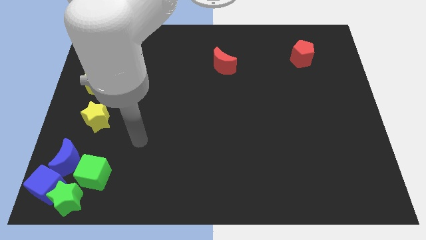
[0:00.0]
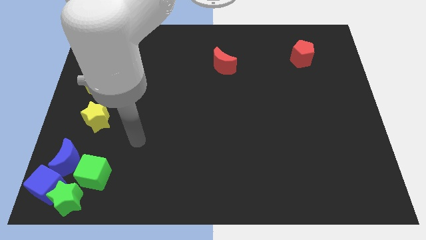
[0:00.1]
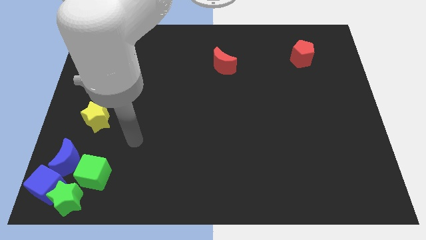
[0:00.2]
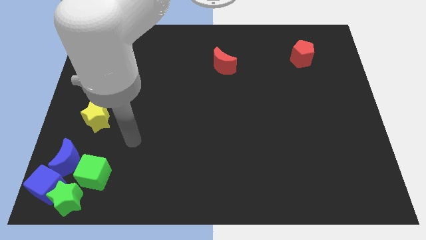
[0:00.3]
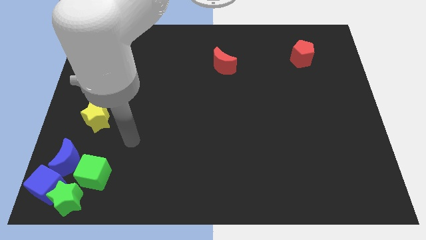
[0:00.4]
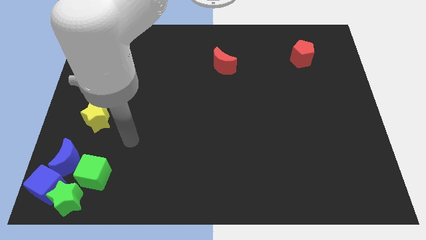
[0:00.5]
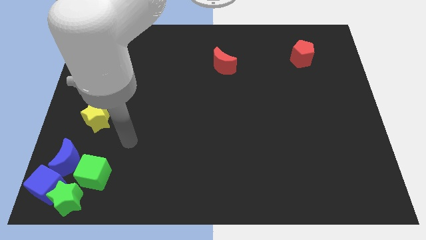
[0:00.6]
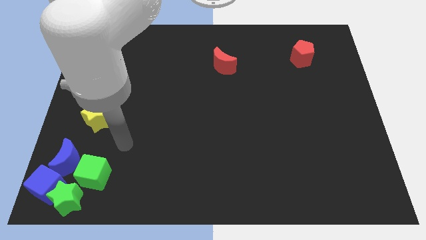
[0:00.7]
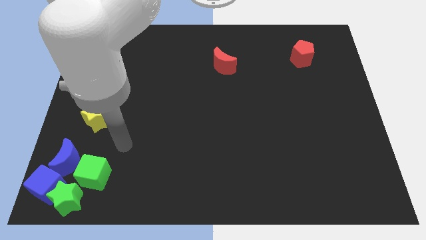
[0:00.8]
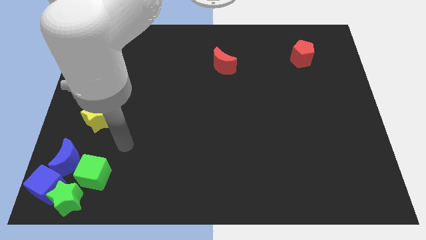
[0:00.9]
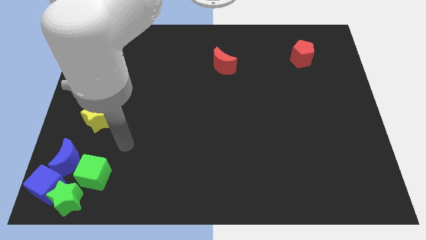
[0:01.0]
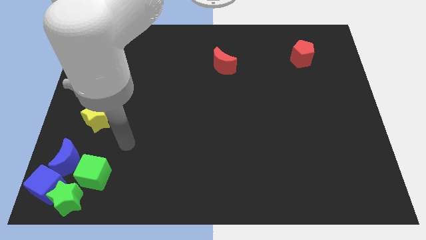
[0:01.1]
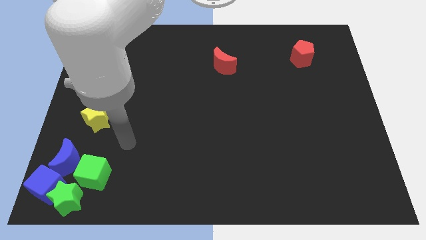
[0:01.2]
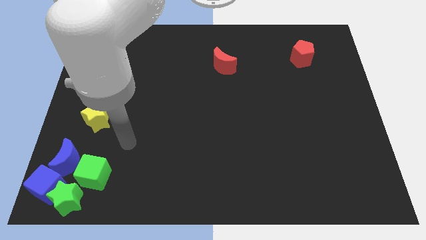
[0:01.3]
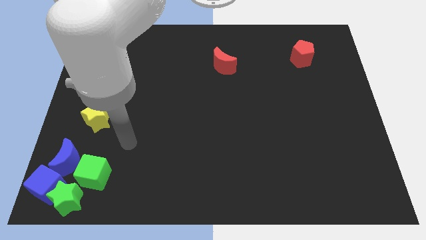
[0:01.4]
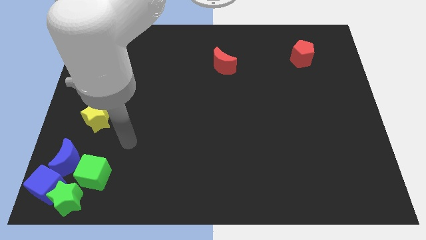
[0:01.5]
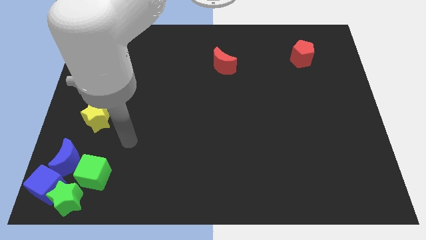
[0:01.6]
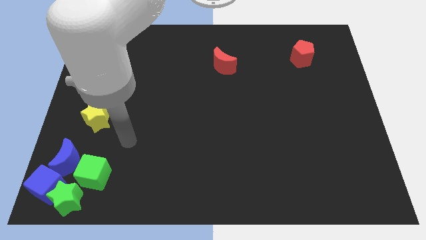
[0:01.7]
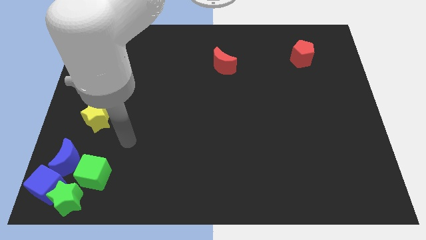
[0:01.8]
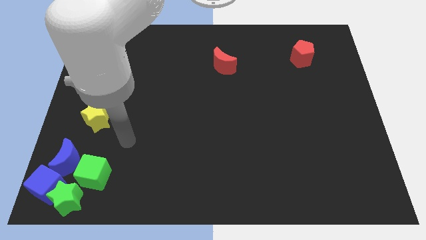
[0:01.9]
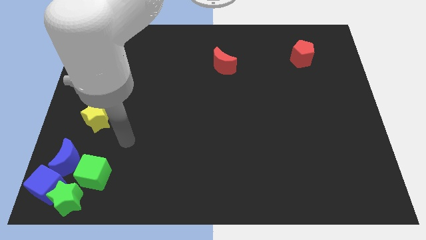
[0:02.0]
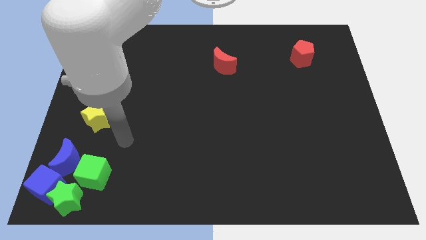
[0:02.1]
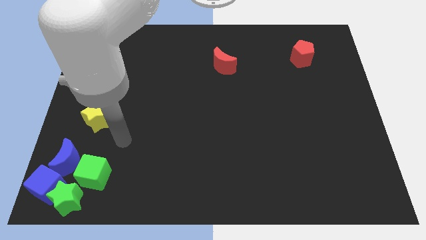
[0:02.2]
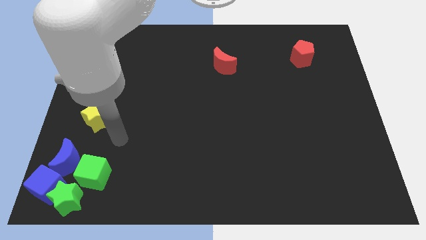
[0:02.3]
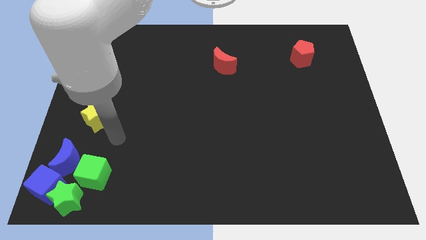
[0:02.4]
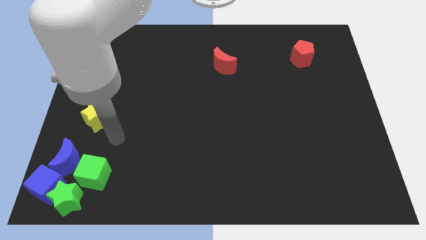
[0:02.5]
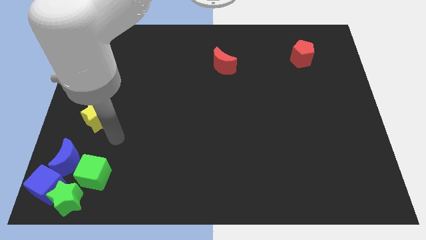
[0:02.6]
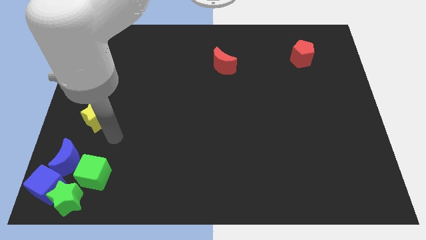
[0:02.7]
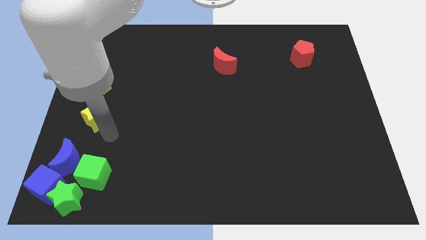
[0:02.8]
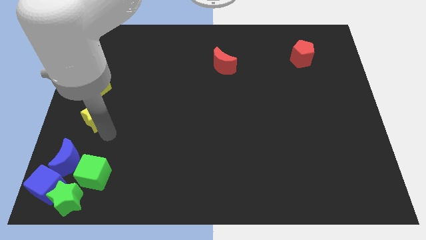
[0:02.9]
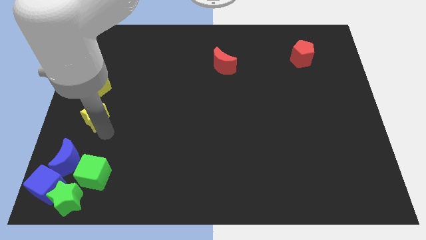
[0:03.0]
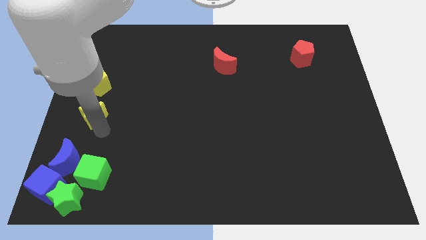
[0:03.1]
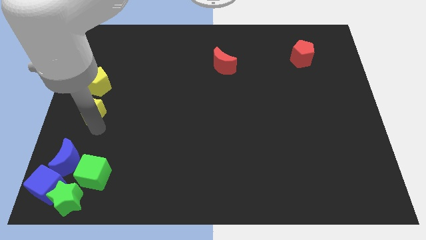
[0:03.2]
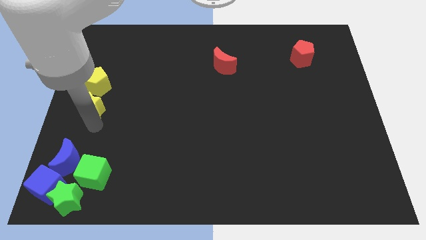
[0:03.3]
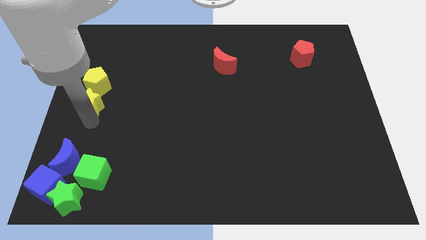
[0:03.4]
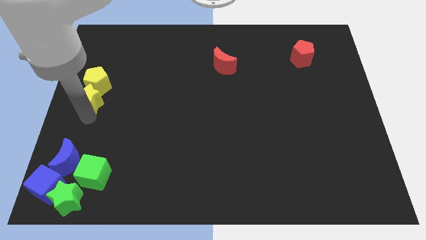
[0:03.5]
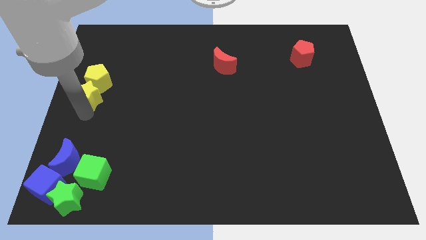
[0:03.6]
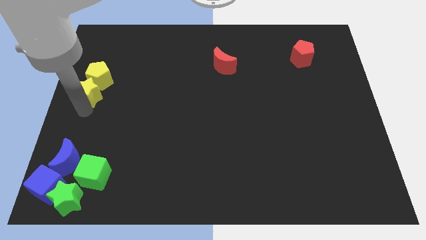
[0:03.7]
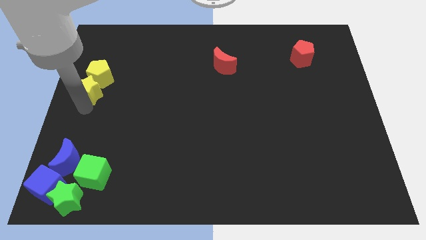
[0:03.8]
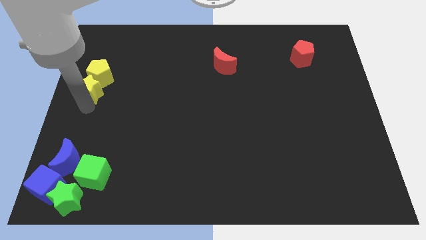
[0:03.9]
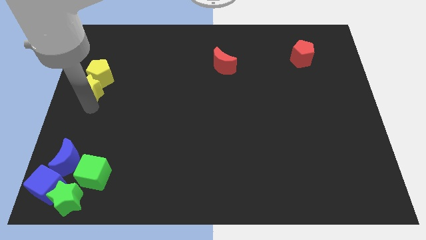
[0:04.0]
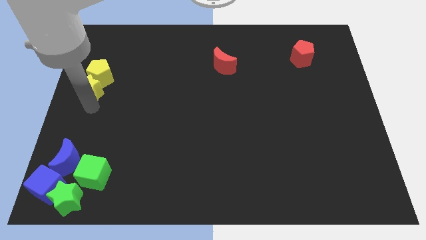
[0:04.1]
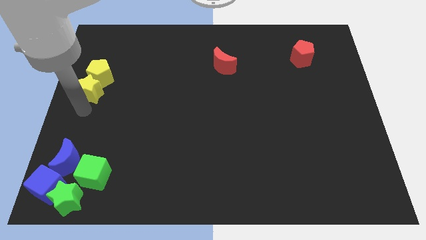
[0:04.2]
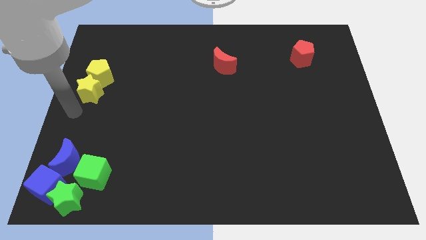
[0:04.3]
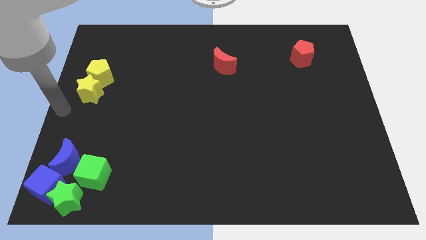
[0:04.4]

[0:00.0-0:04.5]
push the yellow star into the yellow pentagon

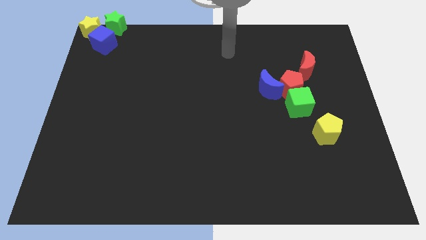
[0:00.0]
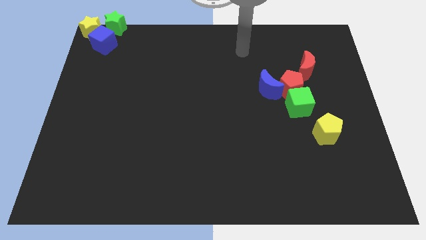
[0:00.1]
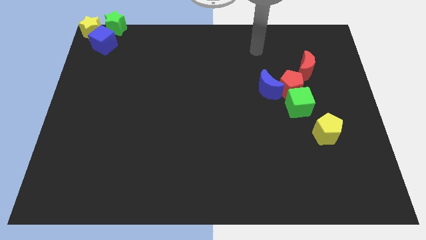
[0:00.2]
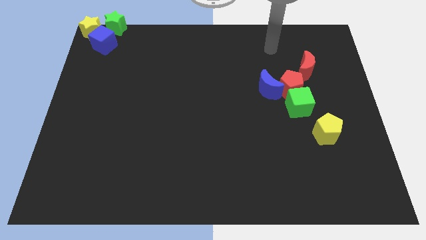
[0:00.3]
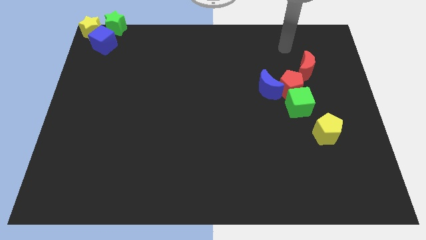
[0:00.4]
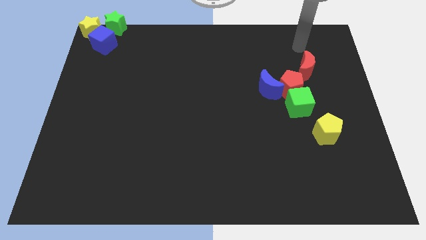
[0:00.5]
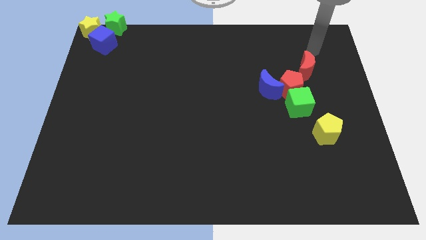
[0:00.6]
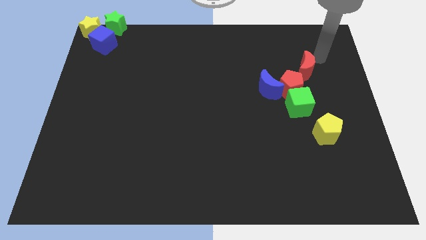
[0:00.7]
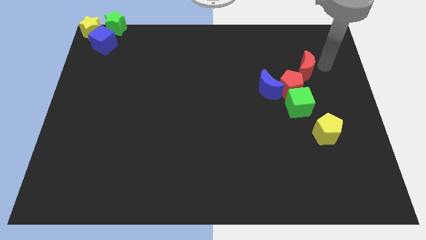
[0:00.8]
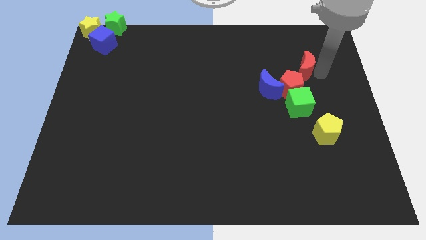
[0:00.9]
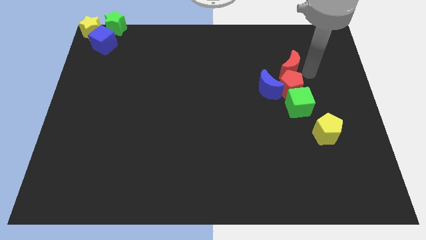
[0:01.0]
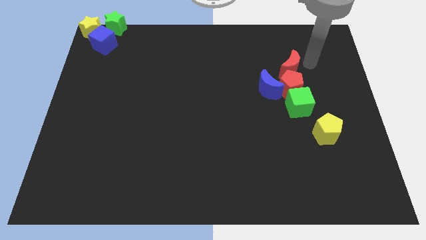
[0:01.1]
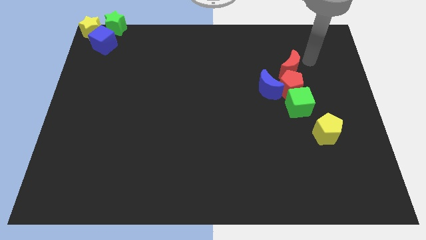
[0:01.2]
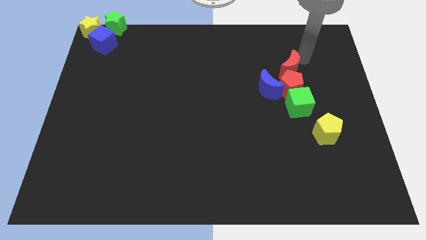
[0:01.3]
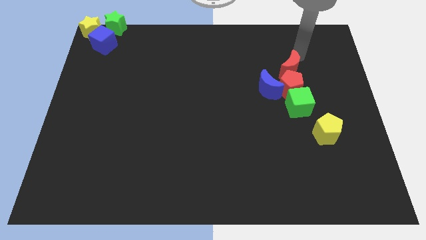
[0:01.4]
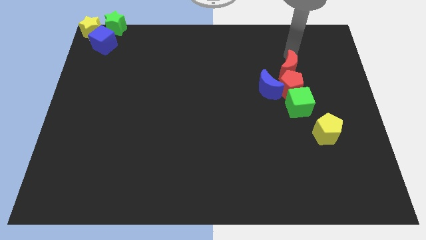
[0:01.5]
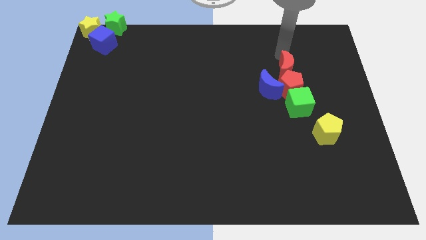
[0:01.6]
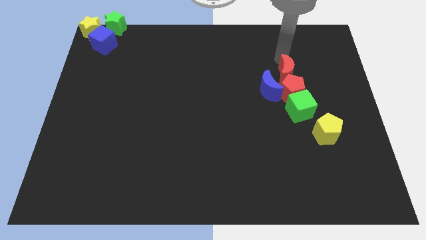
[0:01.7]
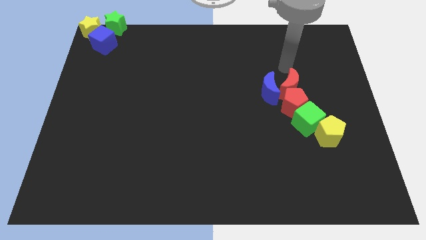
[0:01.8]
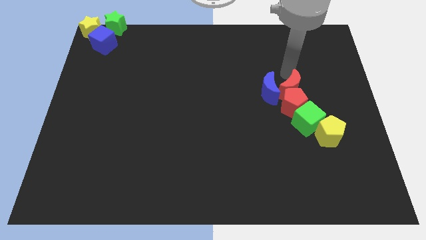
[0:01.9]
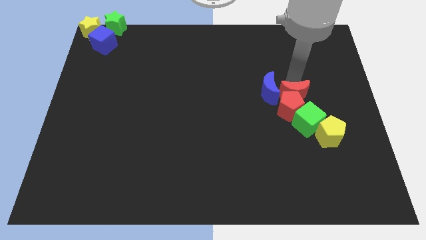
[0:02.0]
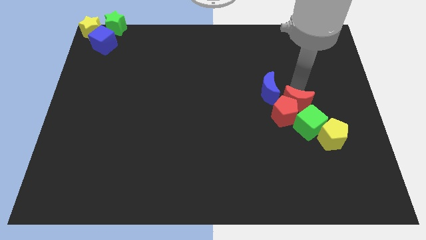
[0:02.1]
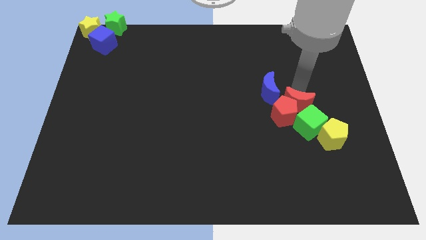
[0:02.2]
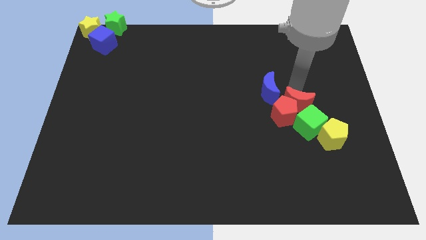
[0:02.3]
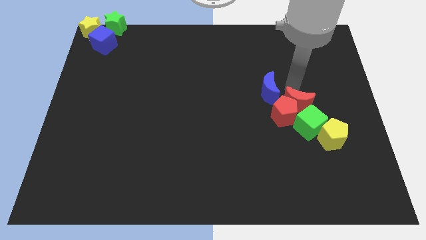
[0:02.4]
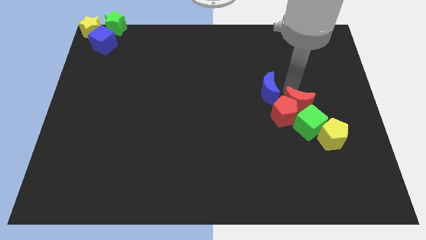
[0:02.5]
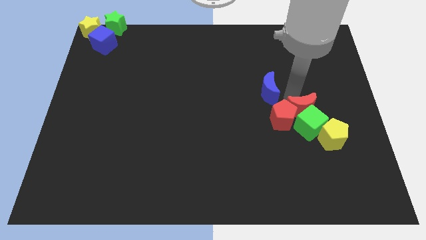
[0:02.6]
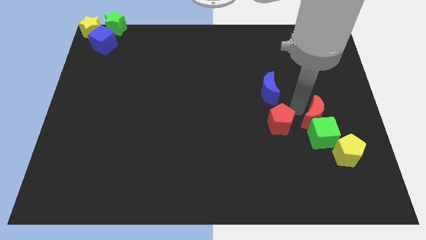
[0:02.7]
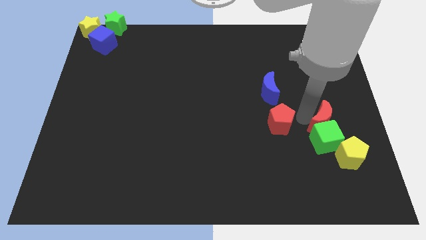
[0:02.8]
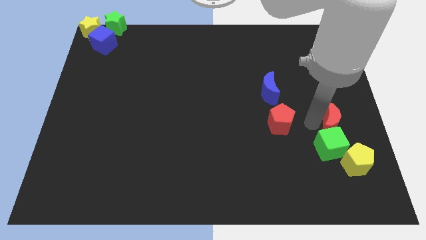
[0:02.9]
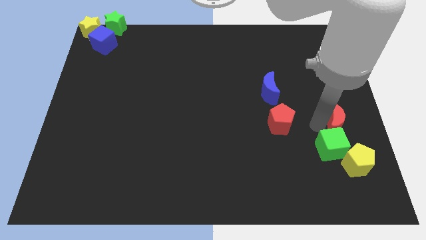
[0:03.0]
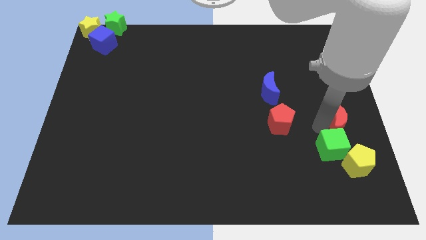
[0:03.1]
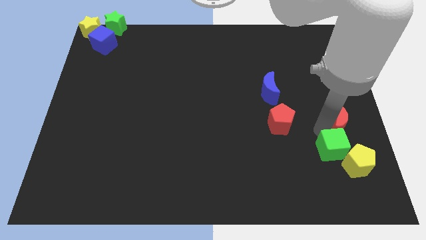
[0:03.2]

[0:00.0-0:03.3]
move the red crescent horizontally to the right side of the red pentagon

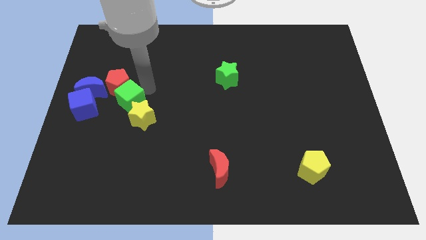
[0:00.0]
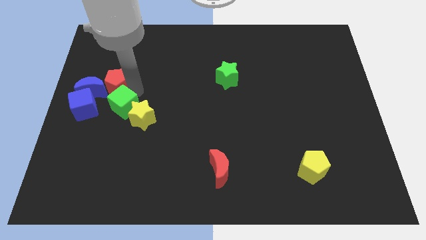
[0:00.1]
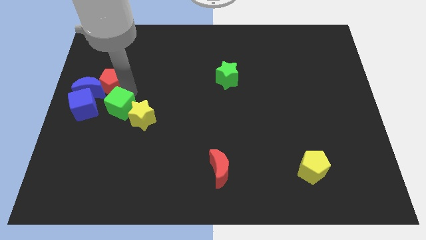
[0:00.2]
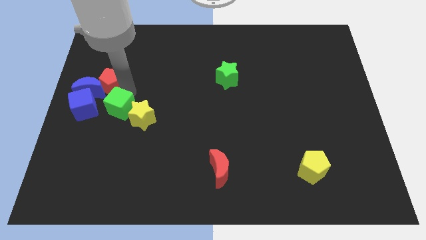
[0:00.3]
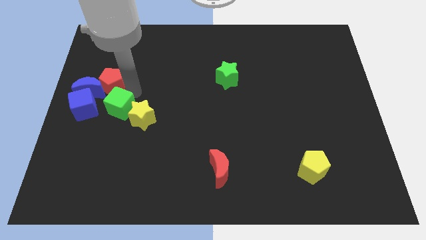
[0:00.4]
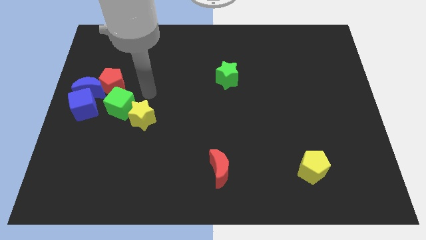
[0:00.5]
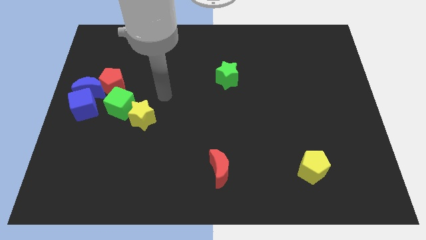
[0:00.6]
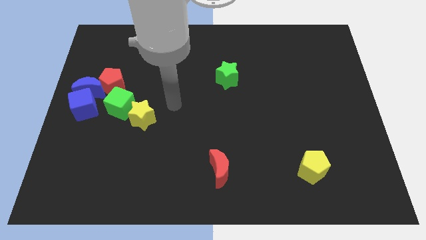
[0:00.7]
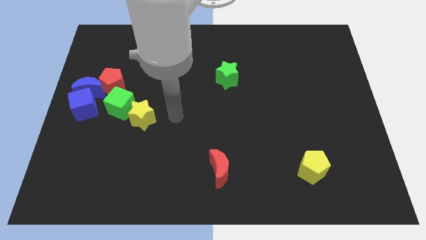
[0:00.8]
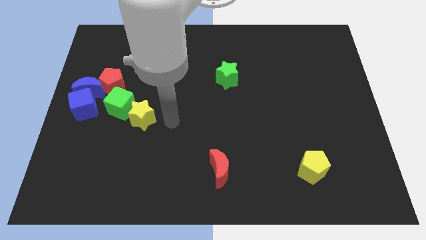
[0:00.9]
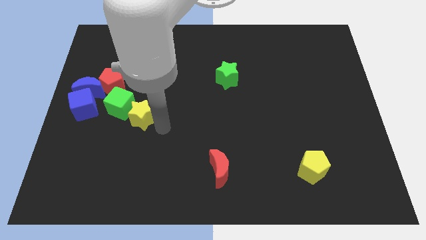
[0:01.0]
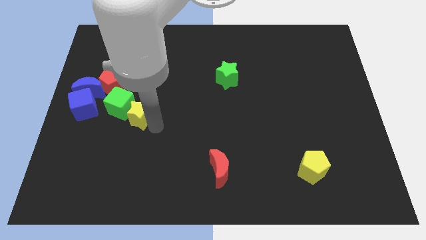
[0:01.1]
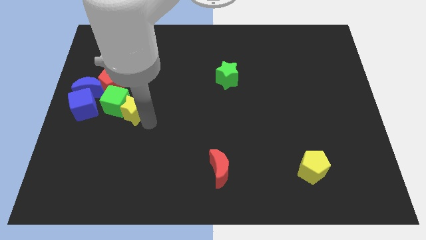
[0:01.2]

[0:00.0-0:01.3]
push green cube into the group of blocks
